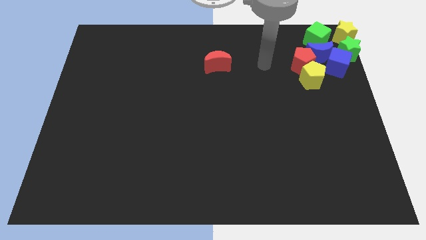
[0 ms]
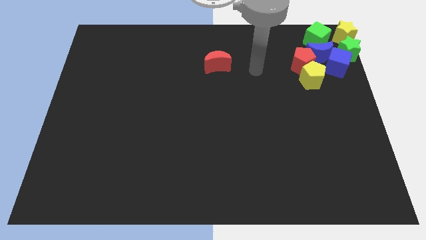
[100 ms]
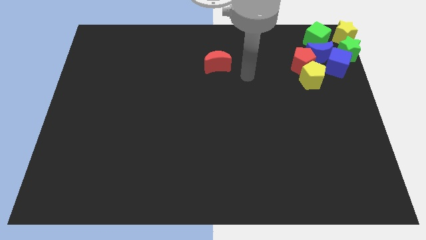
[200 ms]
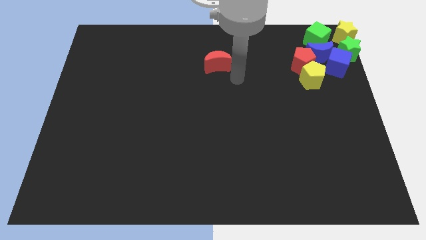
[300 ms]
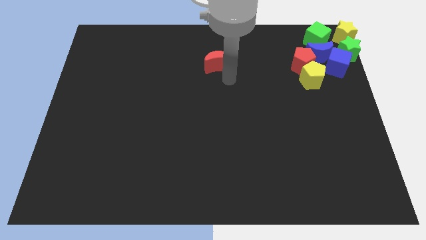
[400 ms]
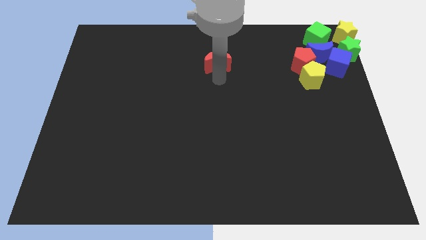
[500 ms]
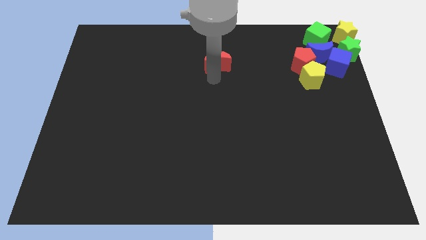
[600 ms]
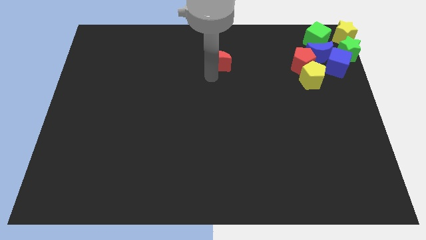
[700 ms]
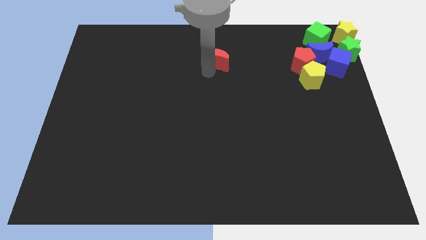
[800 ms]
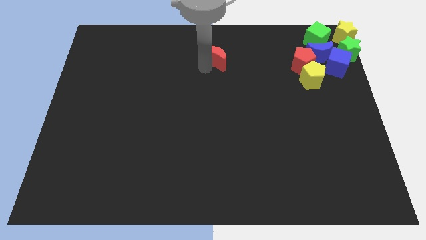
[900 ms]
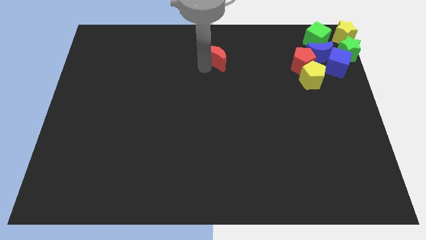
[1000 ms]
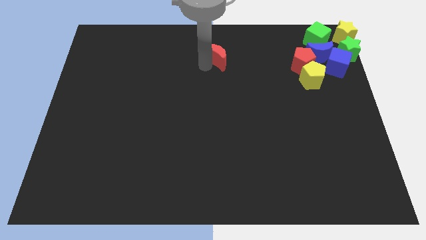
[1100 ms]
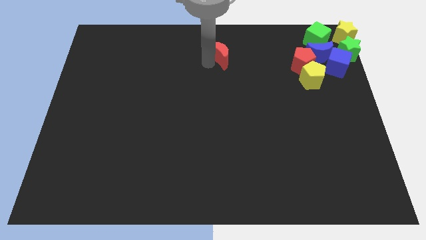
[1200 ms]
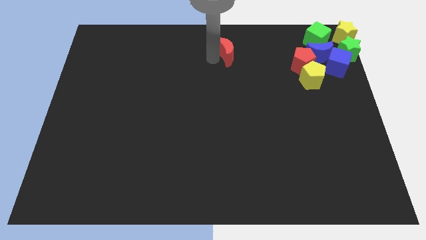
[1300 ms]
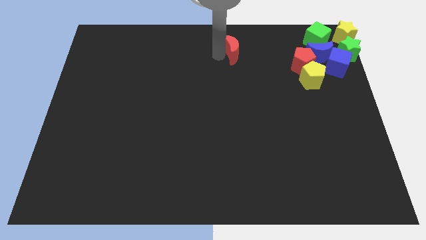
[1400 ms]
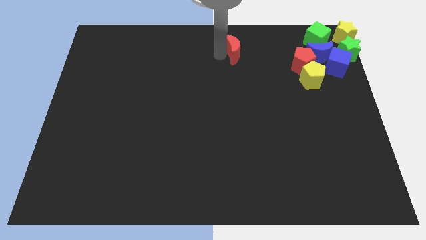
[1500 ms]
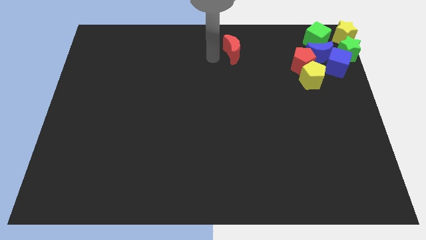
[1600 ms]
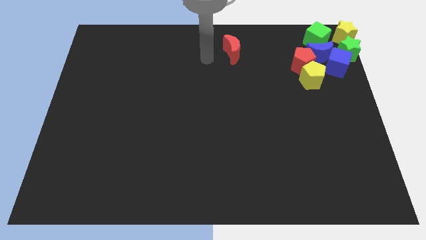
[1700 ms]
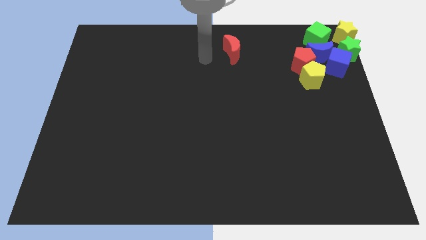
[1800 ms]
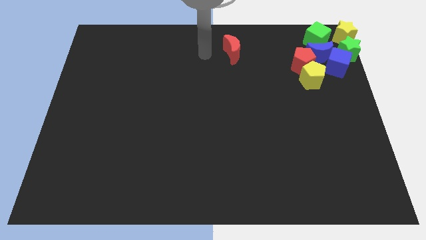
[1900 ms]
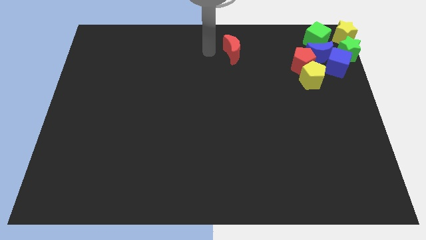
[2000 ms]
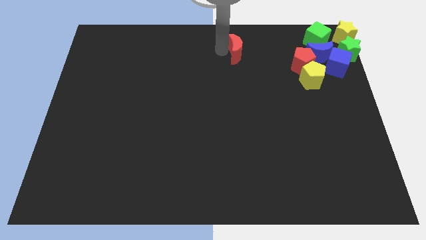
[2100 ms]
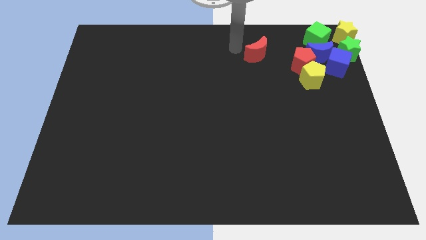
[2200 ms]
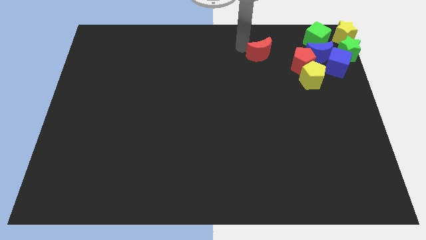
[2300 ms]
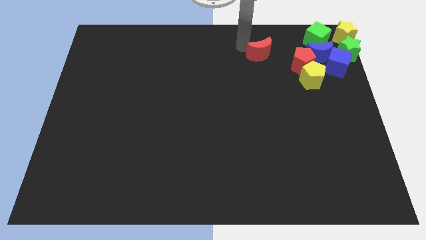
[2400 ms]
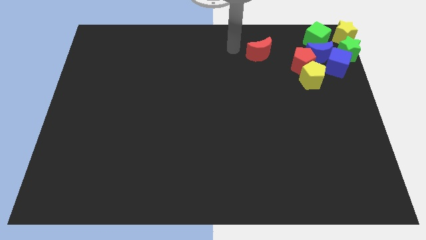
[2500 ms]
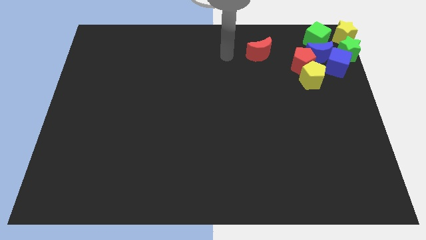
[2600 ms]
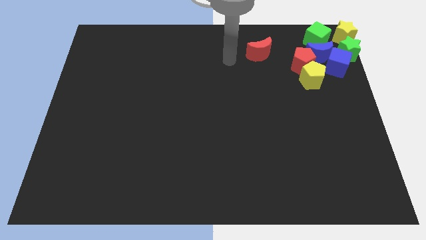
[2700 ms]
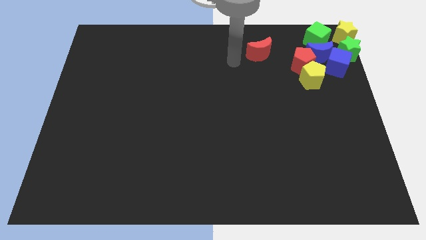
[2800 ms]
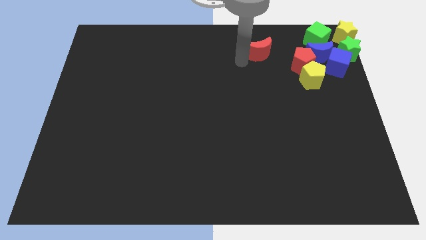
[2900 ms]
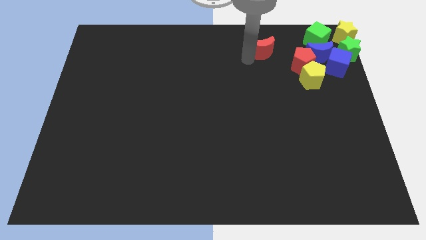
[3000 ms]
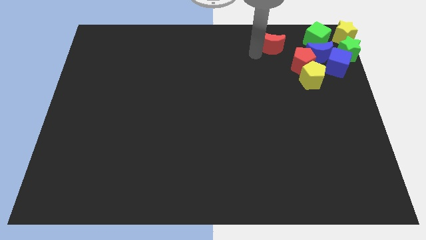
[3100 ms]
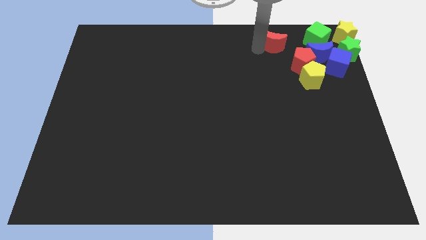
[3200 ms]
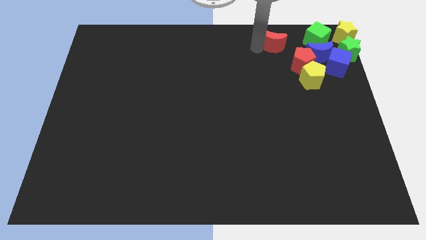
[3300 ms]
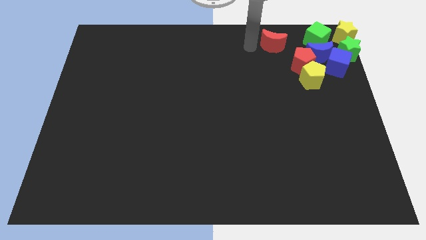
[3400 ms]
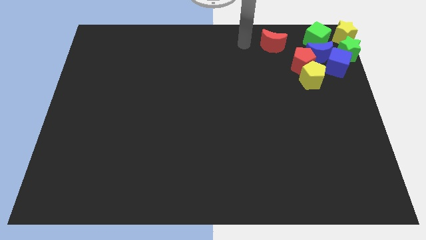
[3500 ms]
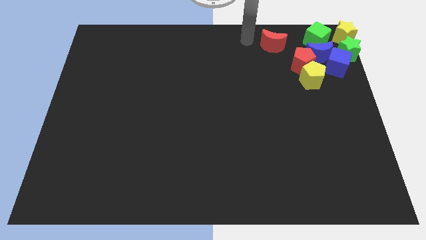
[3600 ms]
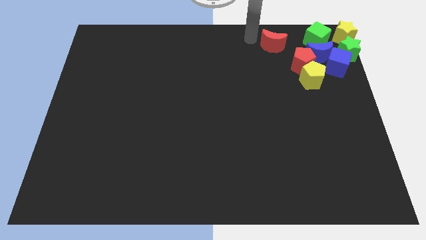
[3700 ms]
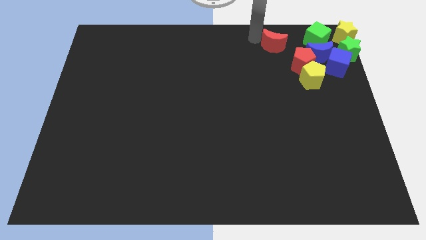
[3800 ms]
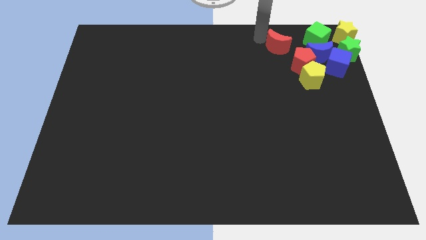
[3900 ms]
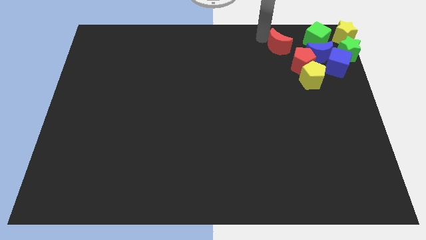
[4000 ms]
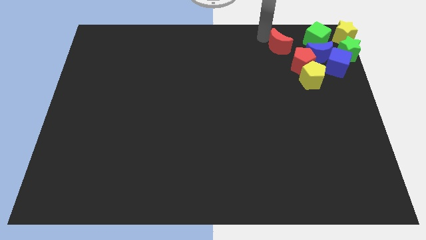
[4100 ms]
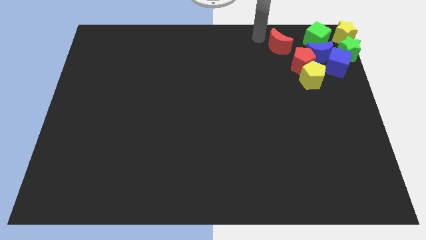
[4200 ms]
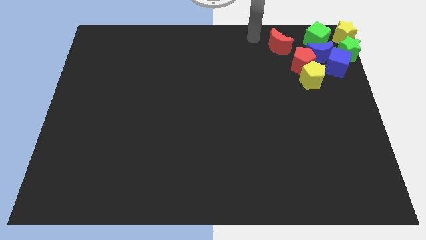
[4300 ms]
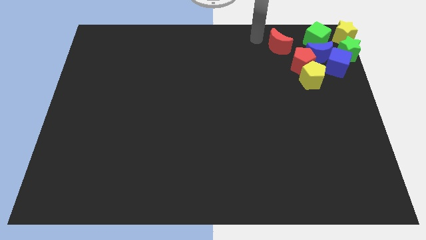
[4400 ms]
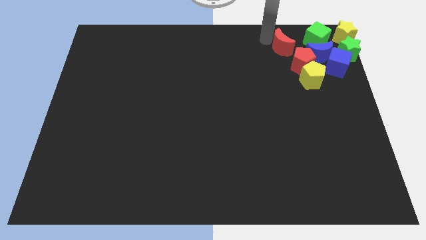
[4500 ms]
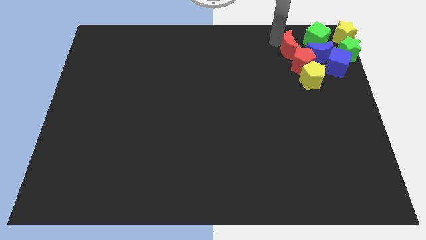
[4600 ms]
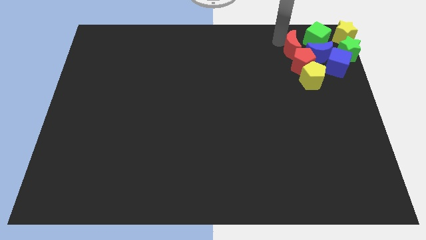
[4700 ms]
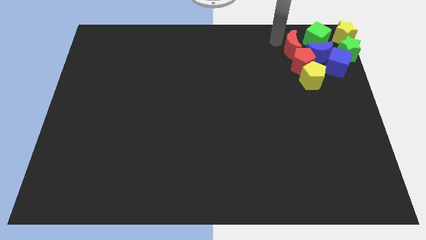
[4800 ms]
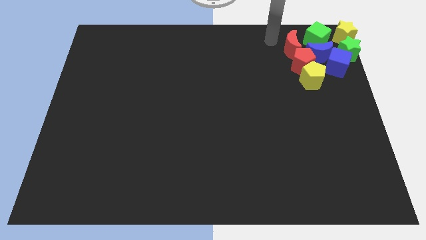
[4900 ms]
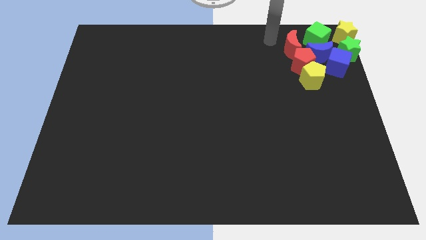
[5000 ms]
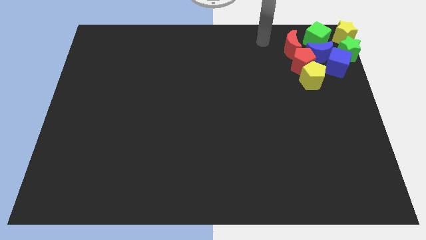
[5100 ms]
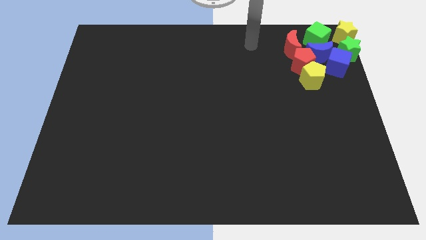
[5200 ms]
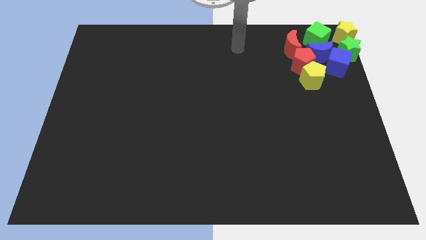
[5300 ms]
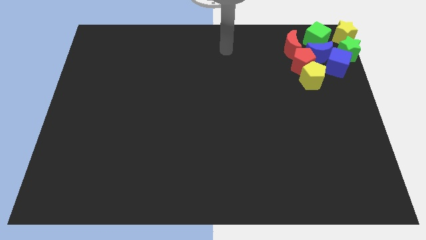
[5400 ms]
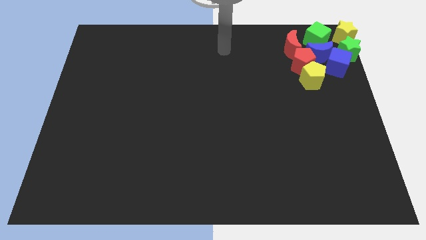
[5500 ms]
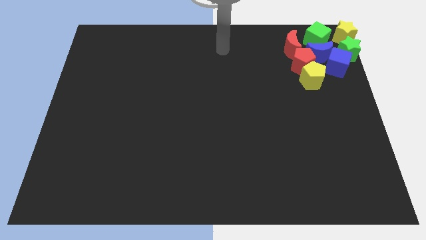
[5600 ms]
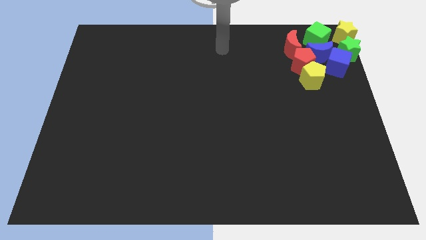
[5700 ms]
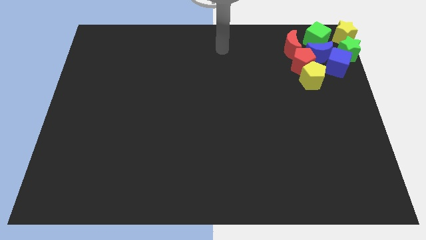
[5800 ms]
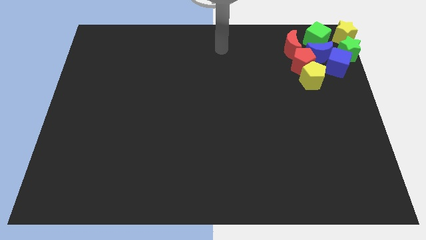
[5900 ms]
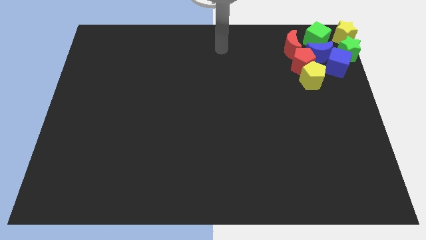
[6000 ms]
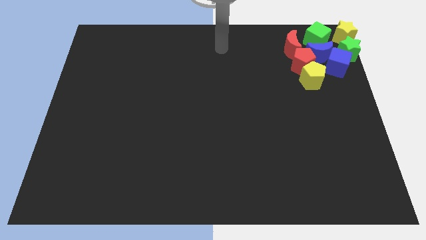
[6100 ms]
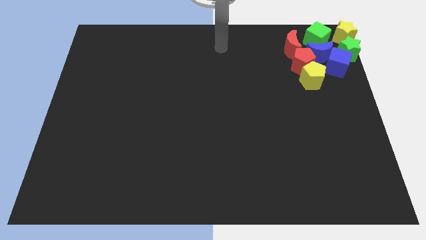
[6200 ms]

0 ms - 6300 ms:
move red crescent to the top right of the board

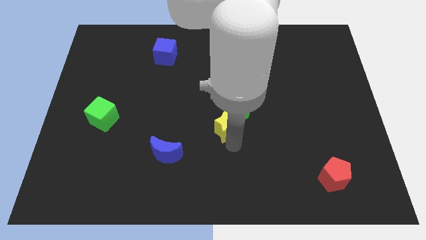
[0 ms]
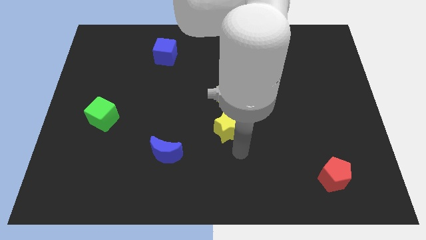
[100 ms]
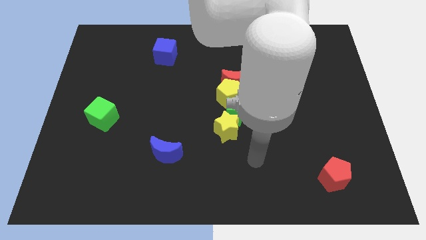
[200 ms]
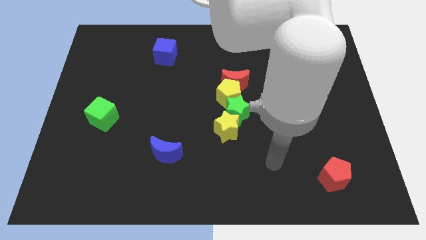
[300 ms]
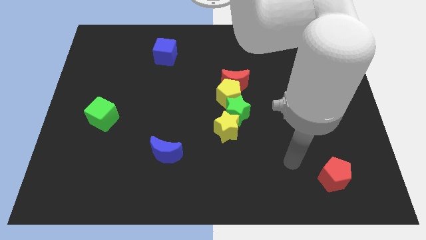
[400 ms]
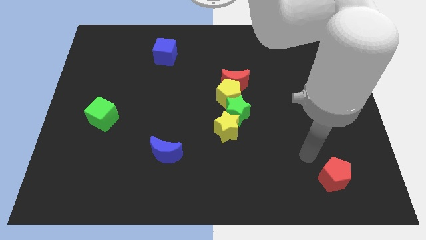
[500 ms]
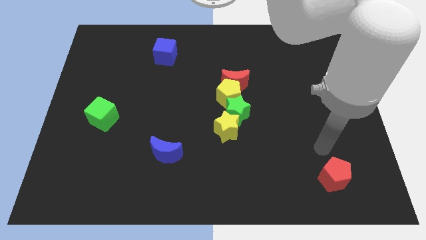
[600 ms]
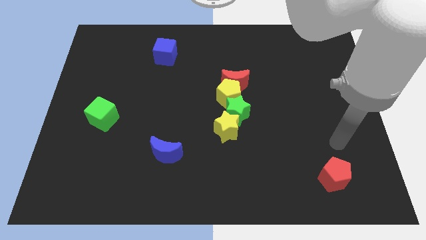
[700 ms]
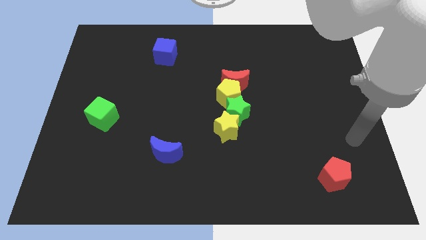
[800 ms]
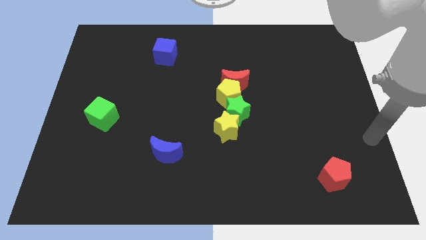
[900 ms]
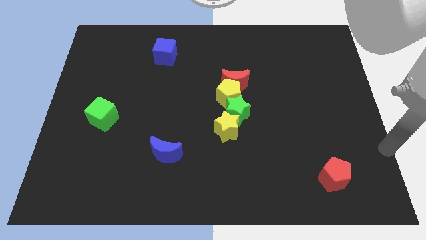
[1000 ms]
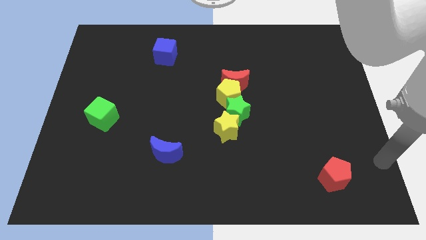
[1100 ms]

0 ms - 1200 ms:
go away from the yellow star

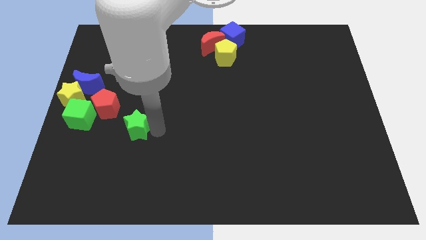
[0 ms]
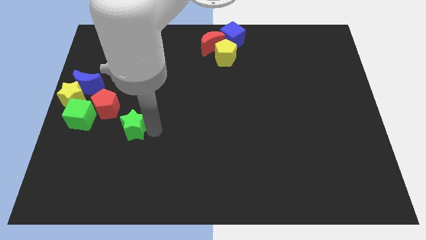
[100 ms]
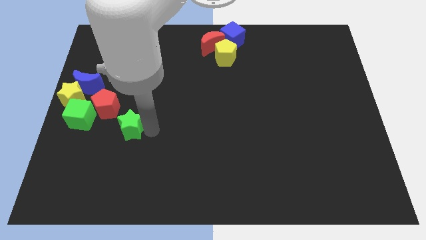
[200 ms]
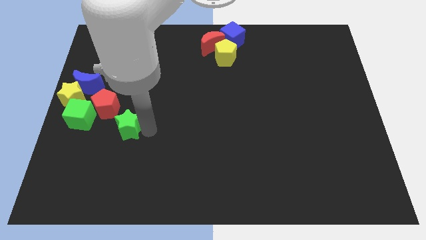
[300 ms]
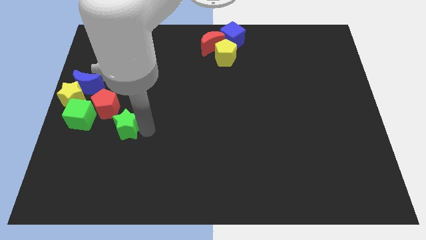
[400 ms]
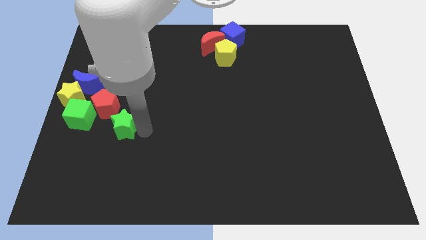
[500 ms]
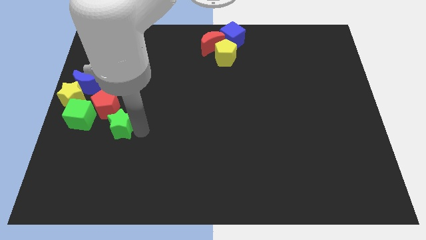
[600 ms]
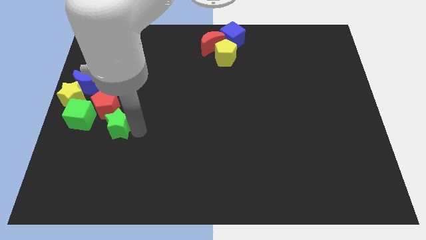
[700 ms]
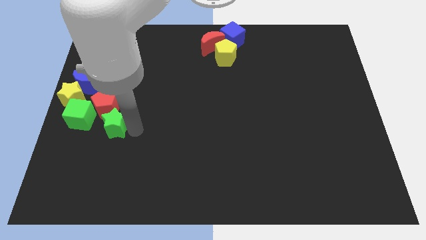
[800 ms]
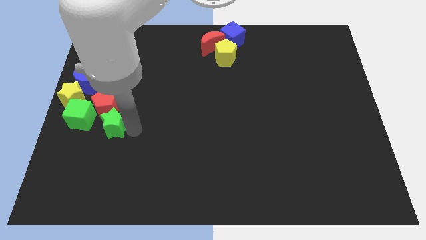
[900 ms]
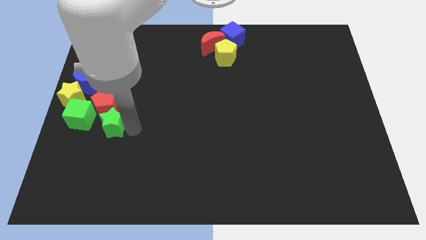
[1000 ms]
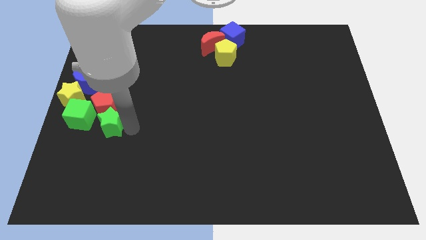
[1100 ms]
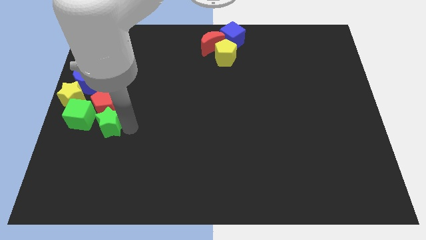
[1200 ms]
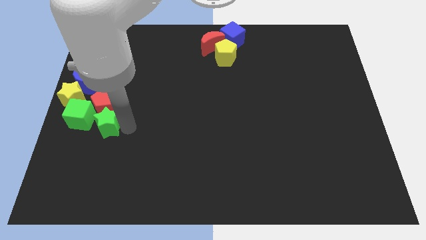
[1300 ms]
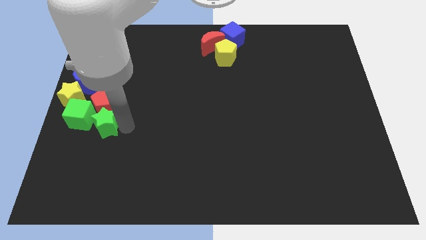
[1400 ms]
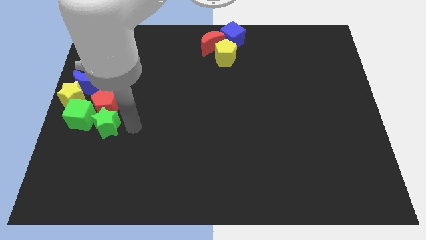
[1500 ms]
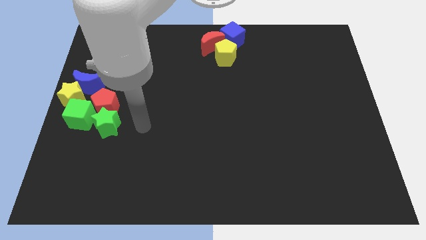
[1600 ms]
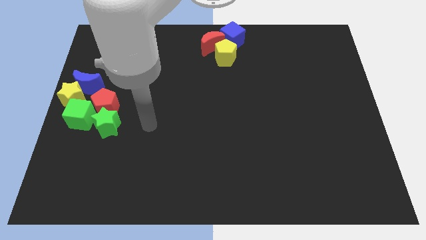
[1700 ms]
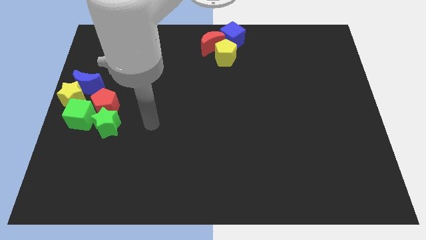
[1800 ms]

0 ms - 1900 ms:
push the green star to the right side of the green cube
